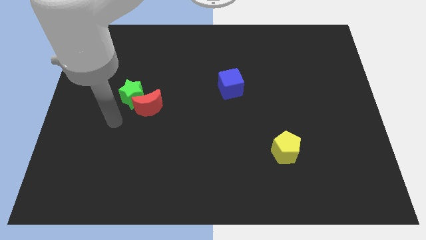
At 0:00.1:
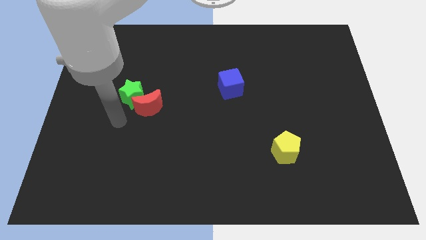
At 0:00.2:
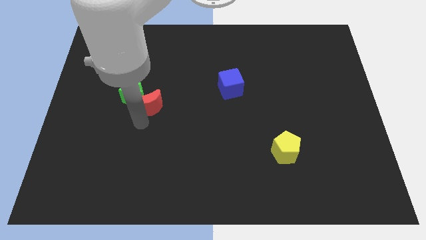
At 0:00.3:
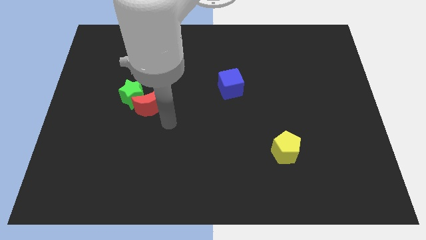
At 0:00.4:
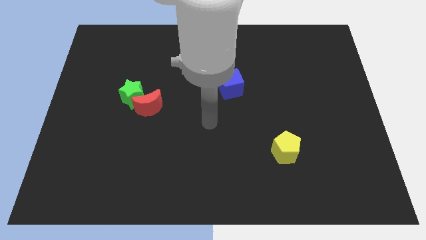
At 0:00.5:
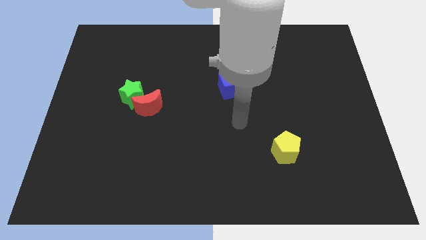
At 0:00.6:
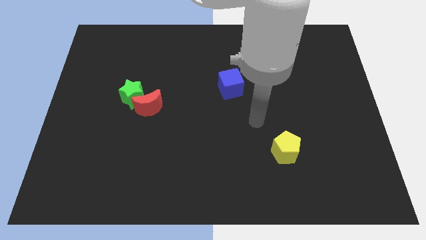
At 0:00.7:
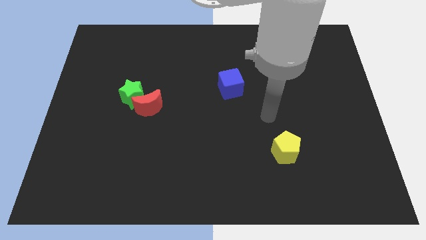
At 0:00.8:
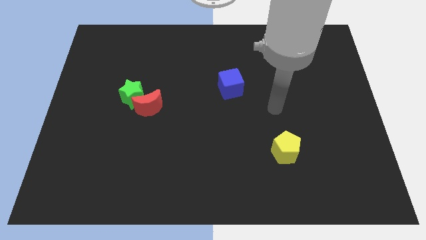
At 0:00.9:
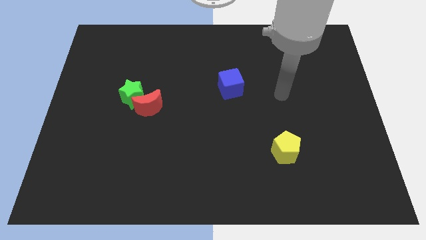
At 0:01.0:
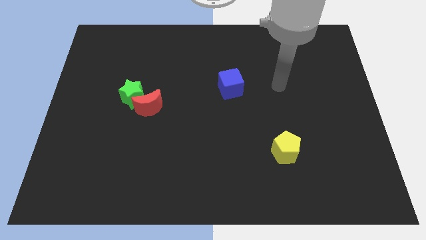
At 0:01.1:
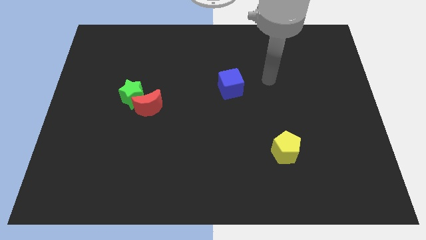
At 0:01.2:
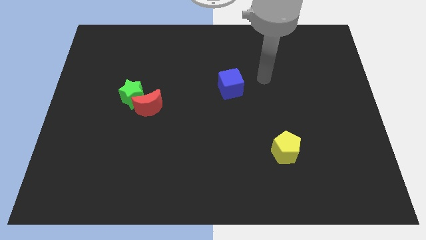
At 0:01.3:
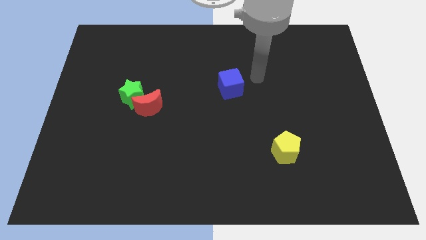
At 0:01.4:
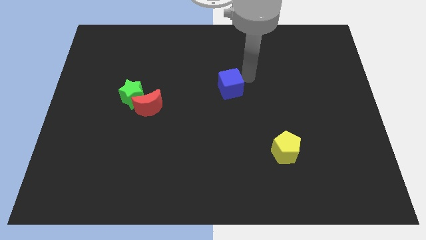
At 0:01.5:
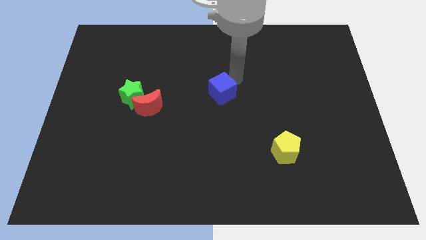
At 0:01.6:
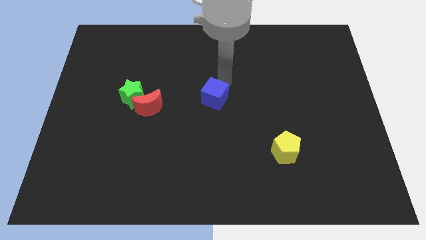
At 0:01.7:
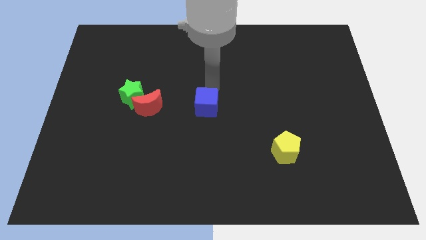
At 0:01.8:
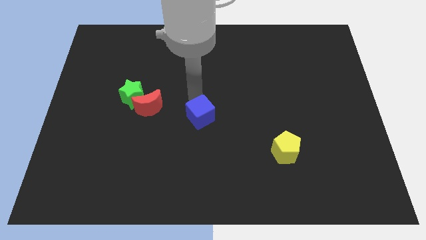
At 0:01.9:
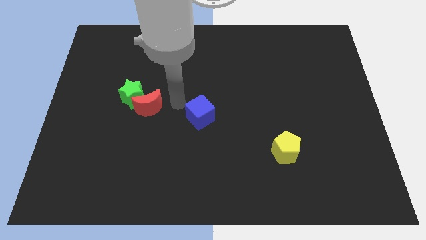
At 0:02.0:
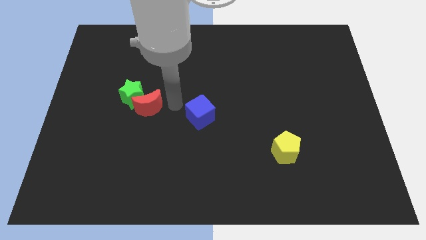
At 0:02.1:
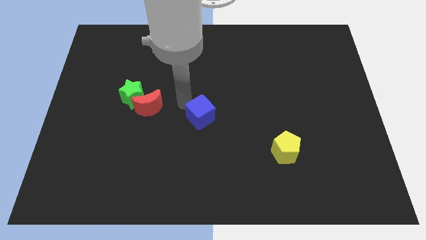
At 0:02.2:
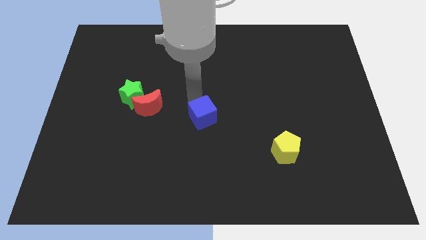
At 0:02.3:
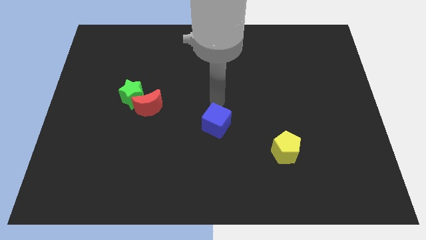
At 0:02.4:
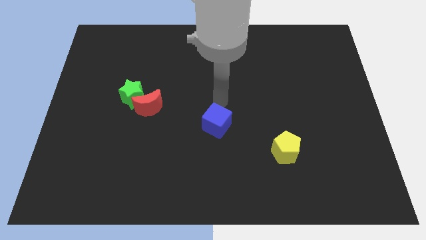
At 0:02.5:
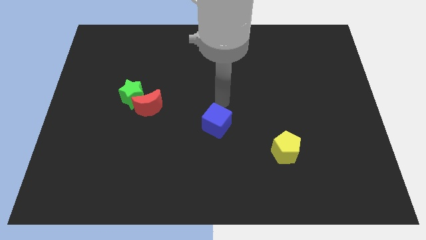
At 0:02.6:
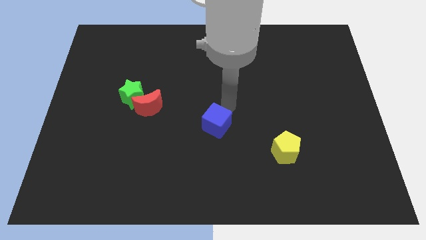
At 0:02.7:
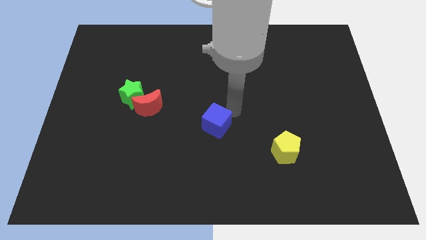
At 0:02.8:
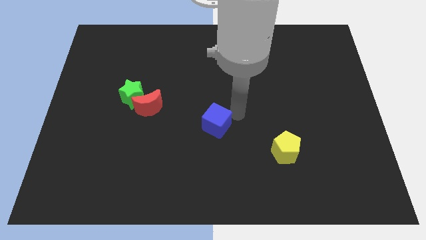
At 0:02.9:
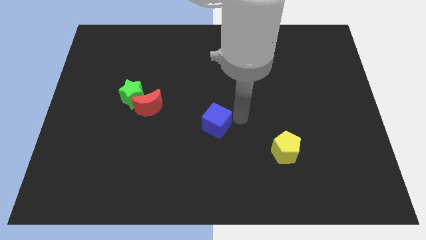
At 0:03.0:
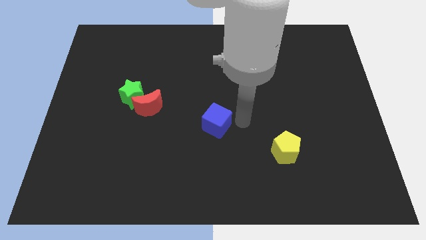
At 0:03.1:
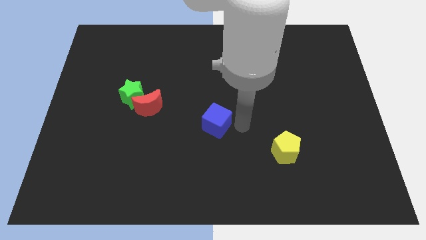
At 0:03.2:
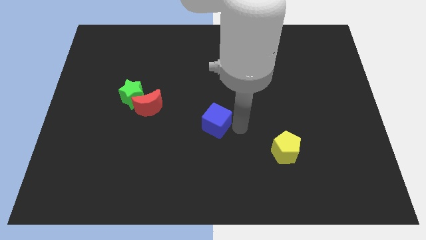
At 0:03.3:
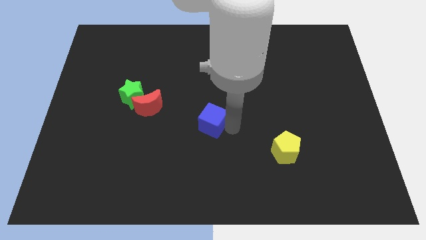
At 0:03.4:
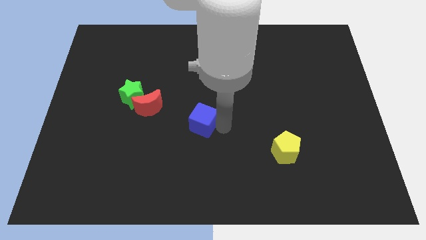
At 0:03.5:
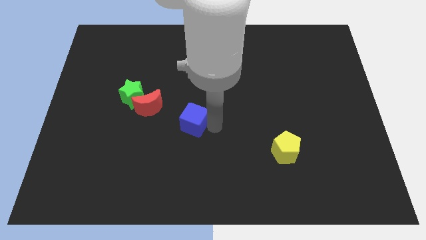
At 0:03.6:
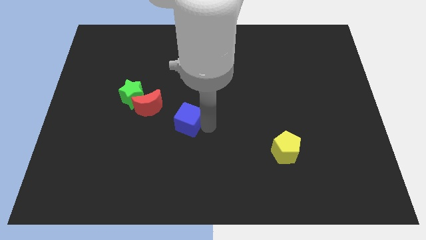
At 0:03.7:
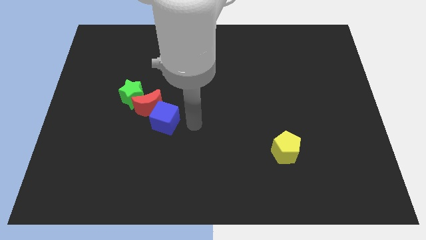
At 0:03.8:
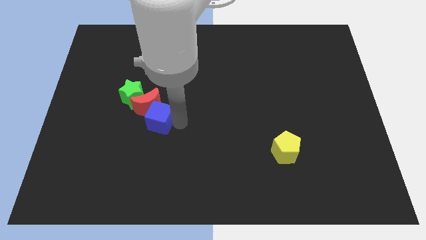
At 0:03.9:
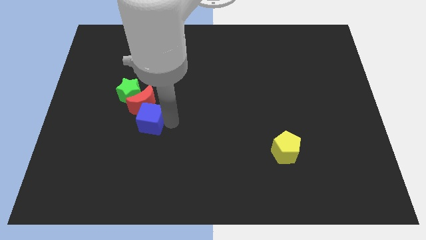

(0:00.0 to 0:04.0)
put the blue block next to the moon

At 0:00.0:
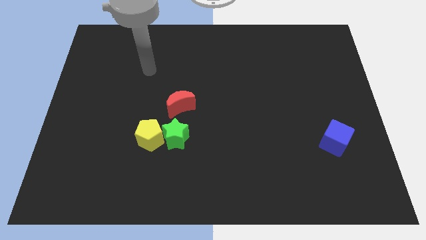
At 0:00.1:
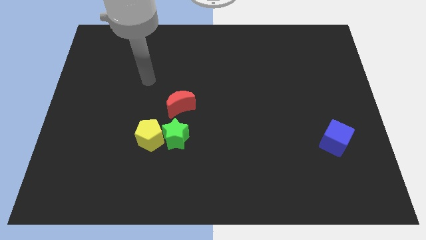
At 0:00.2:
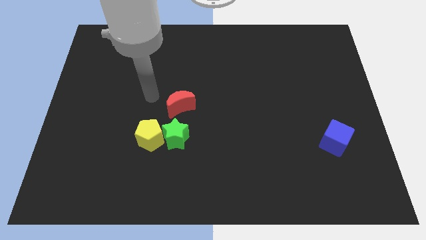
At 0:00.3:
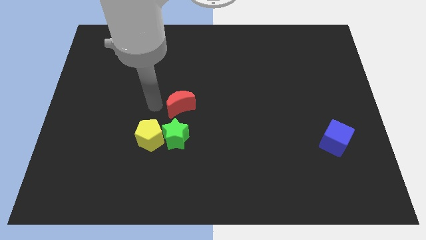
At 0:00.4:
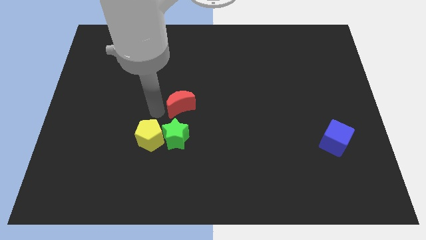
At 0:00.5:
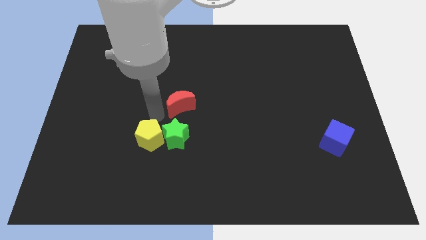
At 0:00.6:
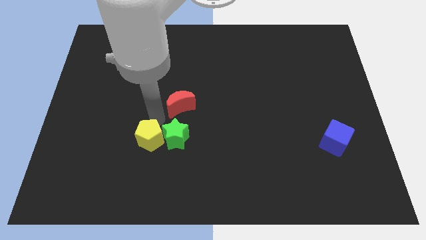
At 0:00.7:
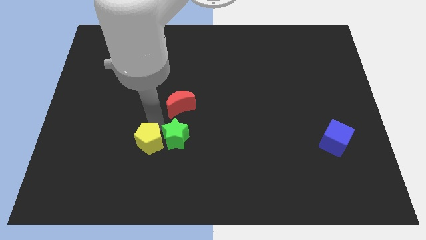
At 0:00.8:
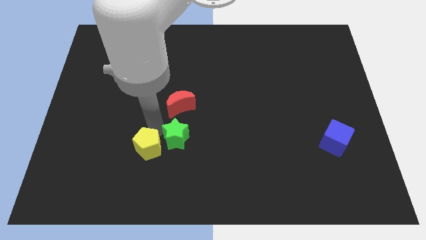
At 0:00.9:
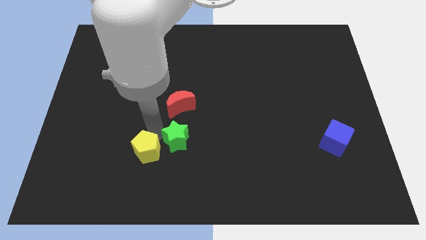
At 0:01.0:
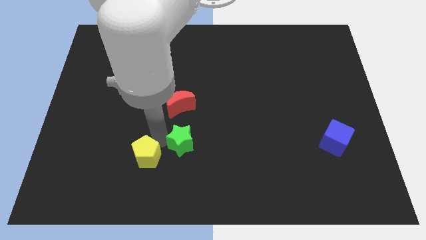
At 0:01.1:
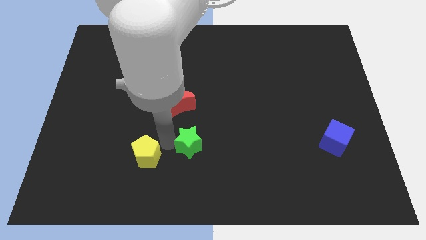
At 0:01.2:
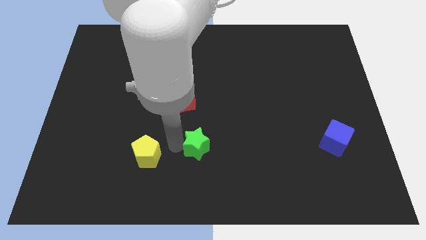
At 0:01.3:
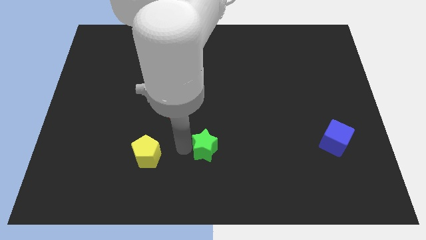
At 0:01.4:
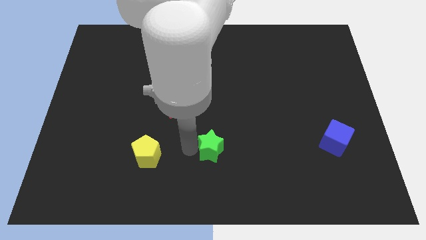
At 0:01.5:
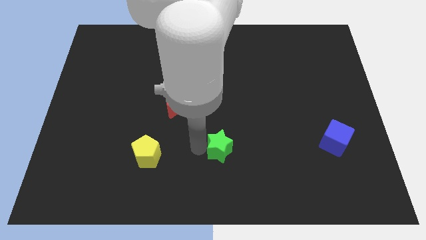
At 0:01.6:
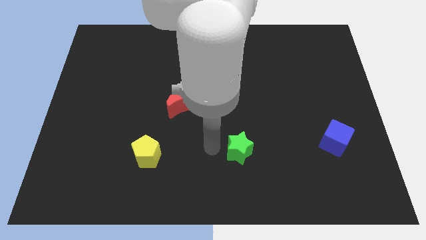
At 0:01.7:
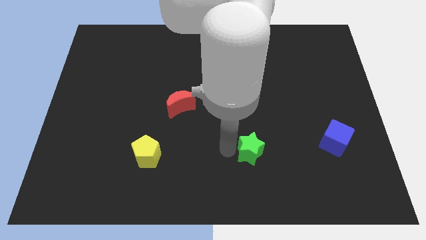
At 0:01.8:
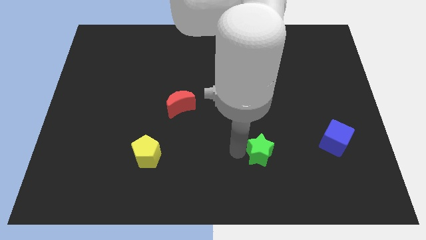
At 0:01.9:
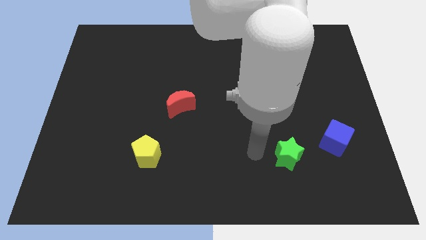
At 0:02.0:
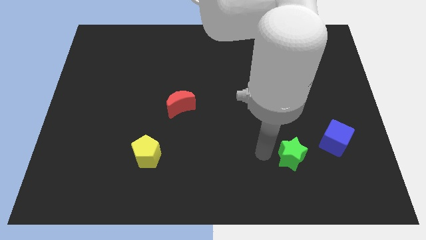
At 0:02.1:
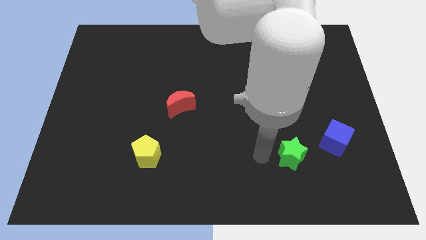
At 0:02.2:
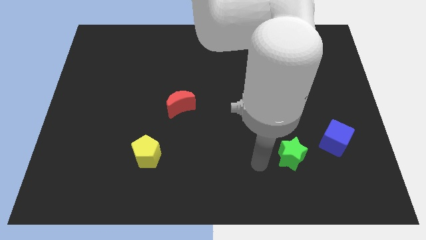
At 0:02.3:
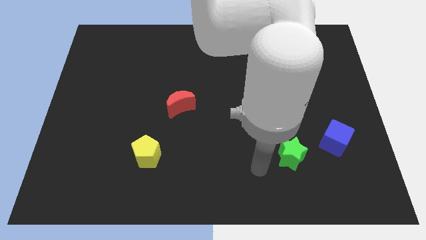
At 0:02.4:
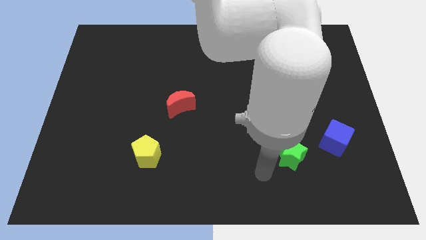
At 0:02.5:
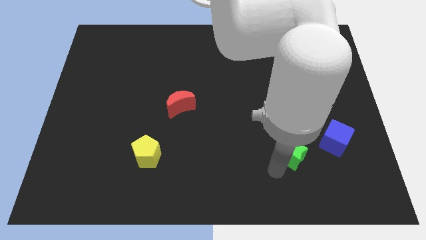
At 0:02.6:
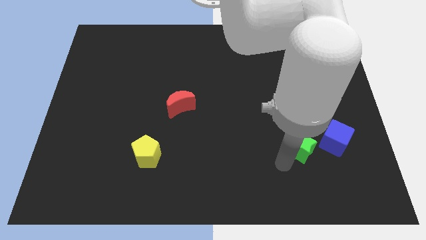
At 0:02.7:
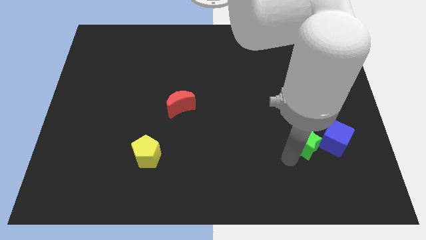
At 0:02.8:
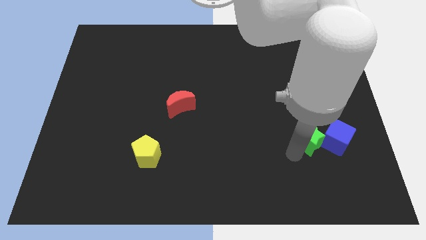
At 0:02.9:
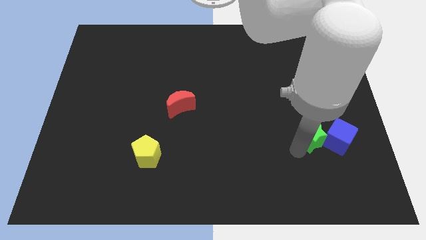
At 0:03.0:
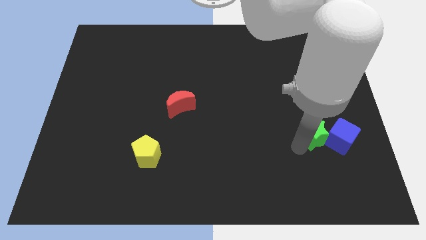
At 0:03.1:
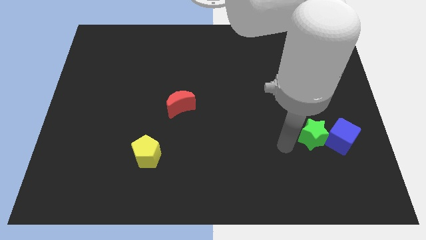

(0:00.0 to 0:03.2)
slide the green star towards the blue cube

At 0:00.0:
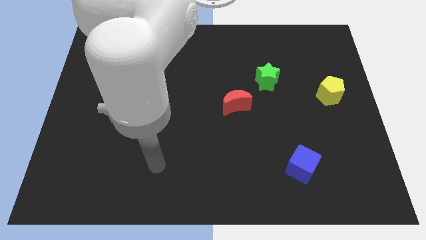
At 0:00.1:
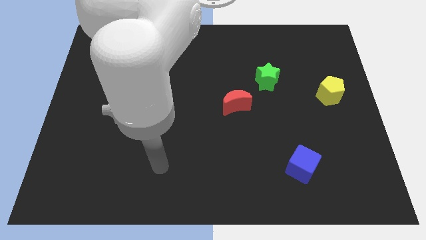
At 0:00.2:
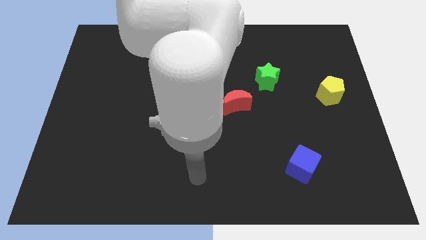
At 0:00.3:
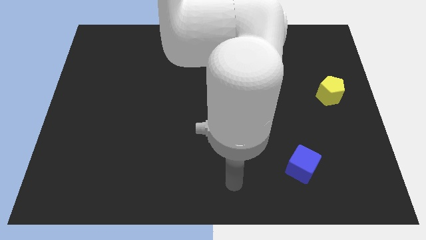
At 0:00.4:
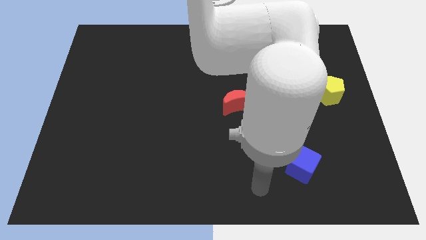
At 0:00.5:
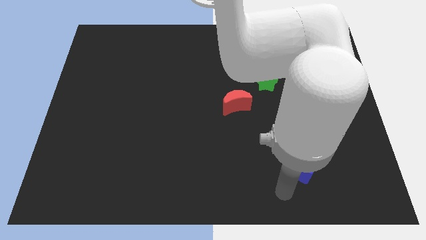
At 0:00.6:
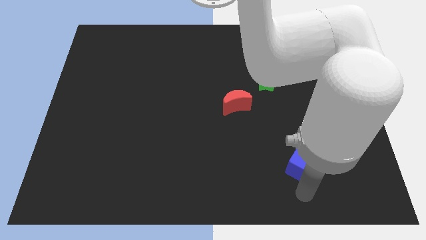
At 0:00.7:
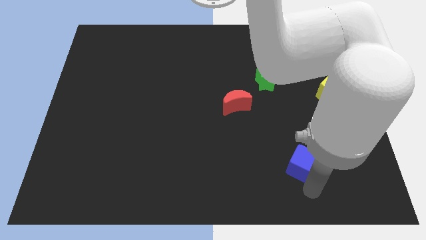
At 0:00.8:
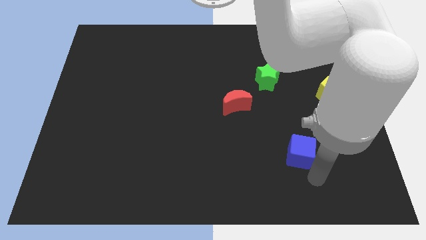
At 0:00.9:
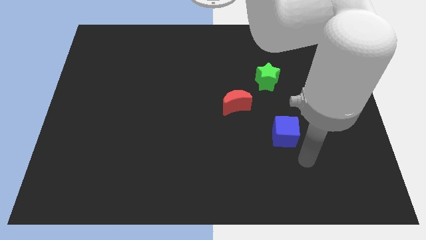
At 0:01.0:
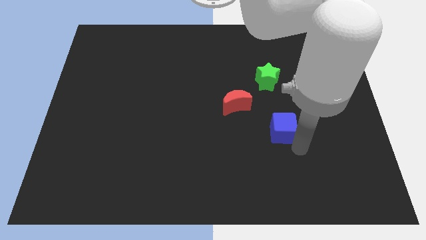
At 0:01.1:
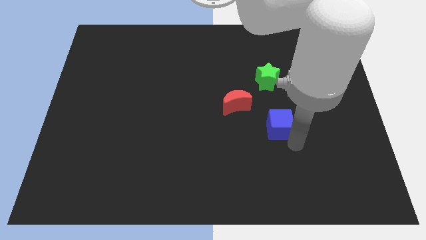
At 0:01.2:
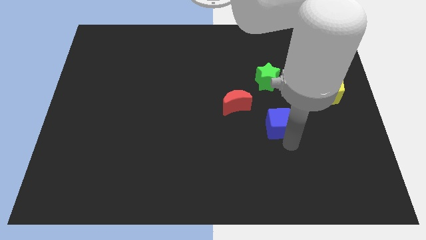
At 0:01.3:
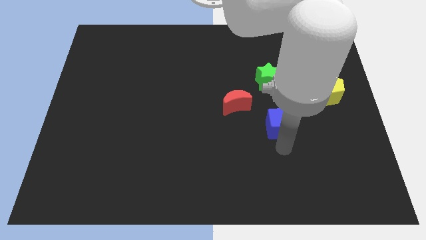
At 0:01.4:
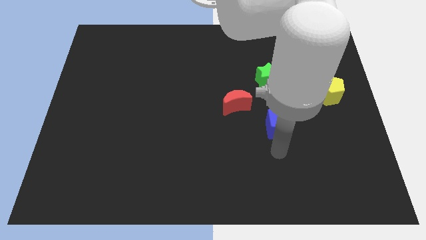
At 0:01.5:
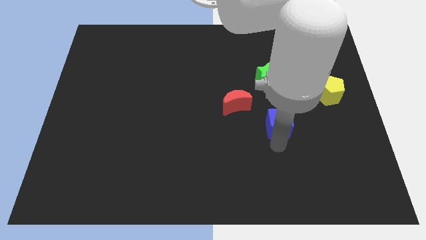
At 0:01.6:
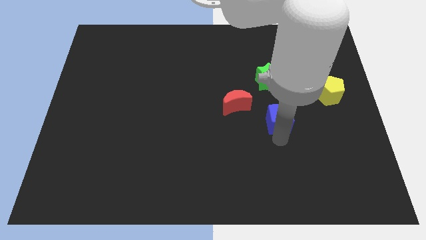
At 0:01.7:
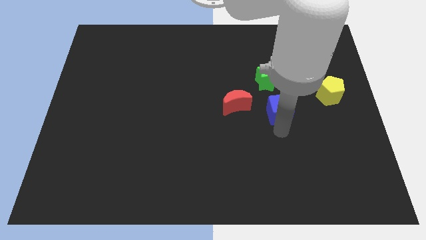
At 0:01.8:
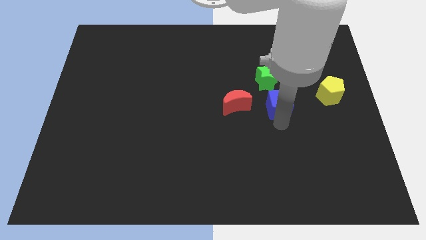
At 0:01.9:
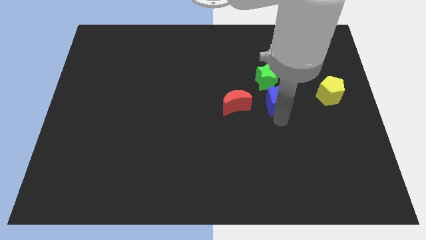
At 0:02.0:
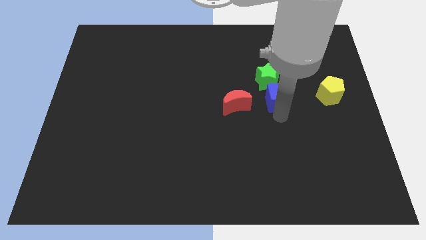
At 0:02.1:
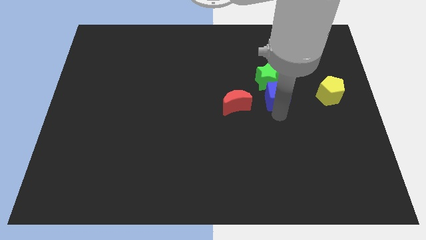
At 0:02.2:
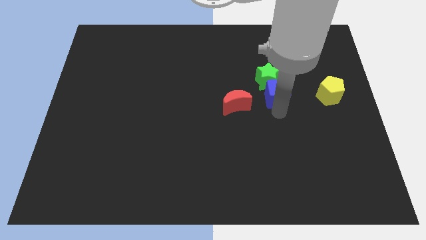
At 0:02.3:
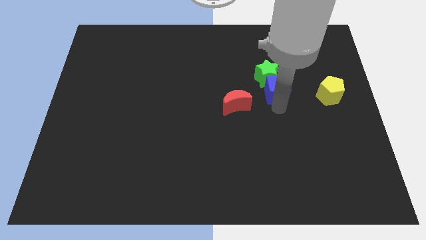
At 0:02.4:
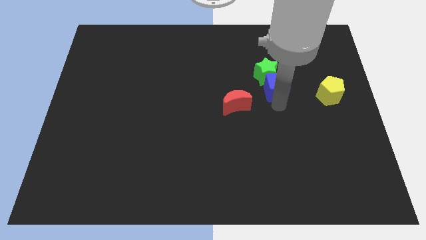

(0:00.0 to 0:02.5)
put the blue block towards the star
